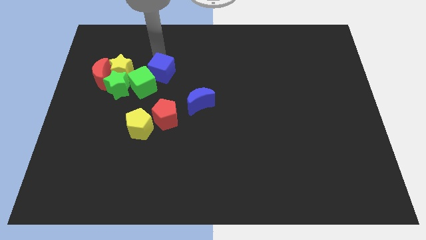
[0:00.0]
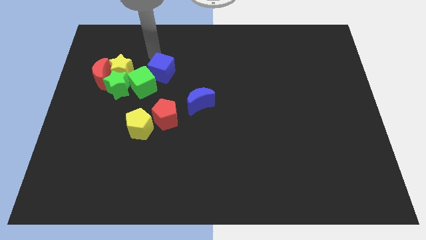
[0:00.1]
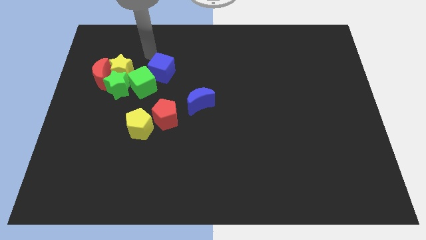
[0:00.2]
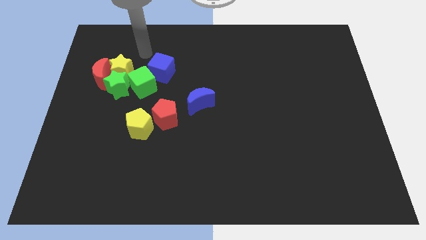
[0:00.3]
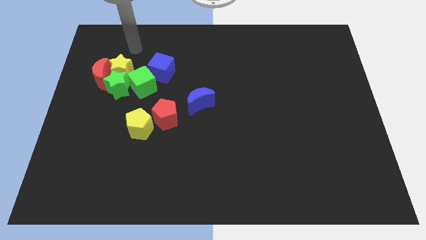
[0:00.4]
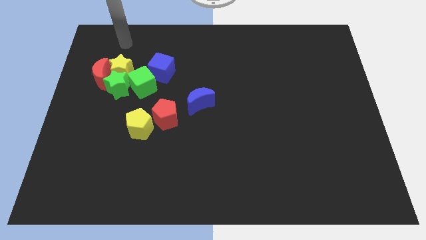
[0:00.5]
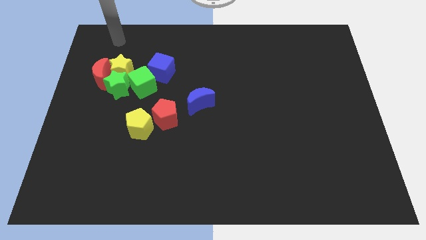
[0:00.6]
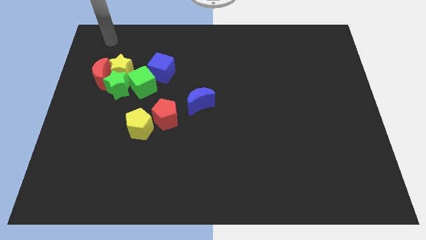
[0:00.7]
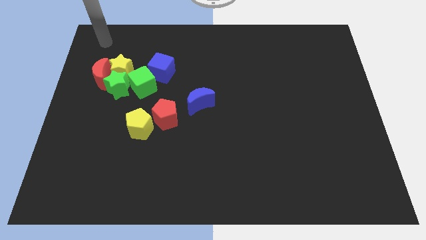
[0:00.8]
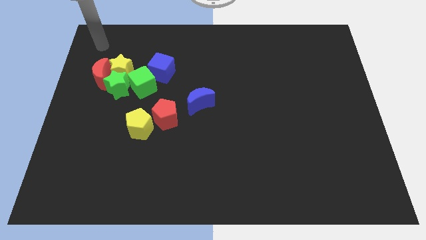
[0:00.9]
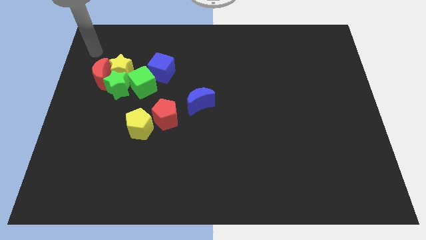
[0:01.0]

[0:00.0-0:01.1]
move the arm away from the blue cube

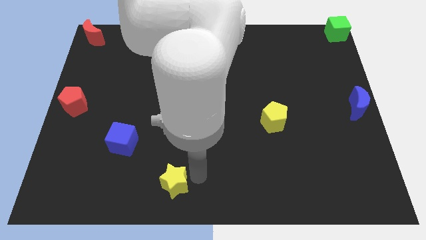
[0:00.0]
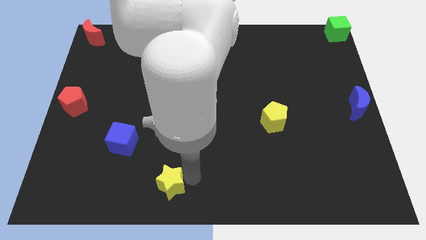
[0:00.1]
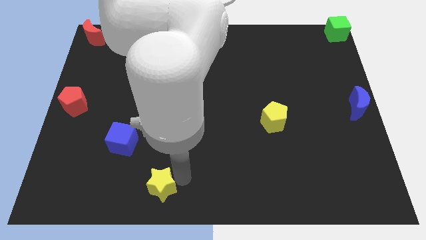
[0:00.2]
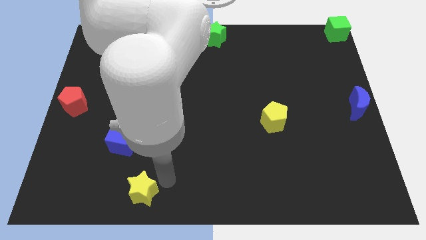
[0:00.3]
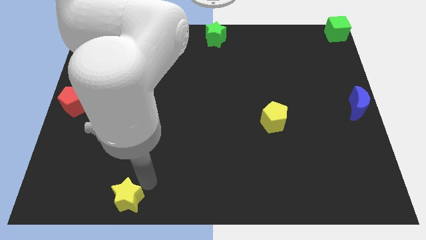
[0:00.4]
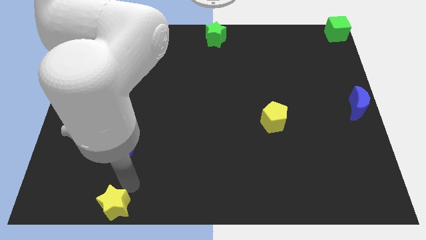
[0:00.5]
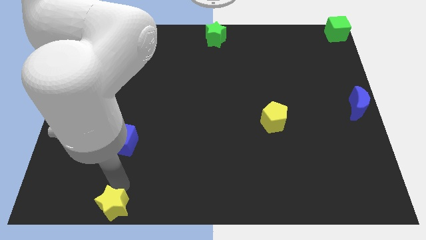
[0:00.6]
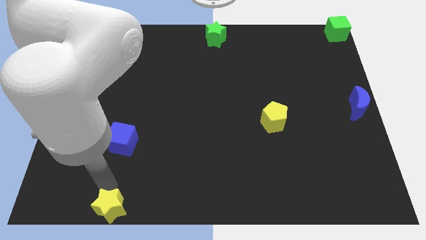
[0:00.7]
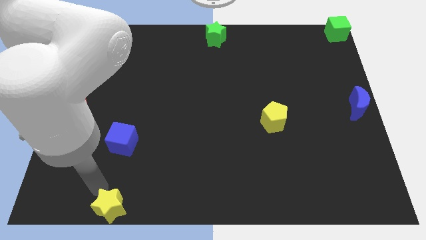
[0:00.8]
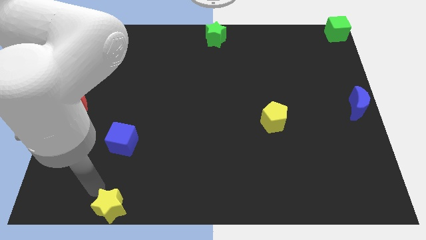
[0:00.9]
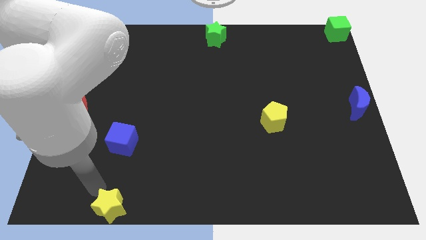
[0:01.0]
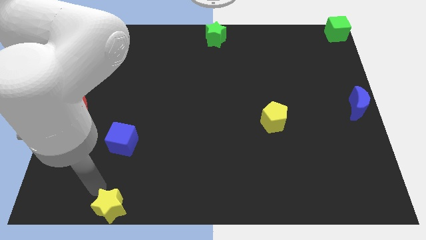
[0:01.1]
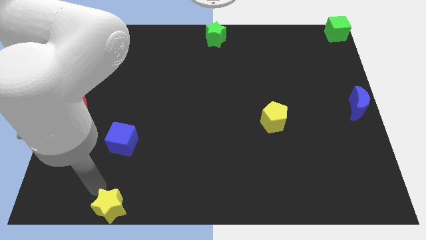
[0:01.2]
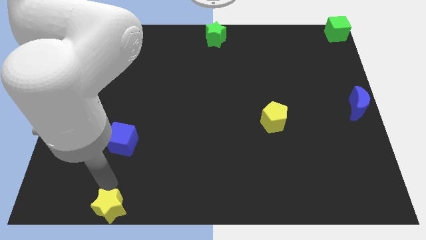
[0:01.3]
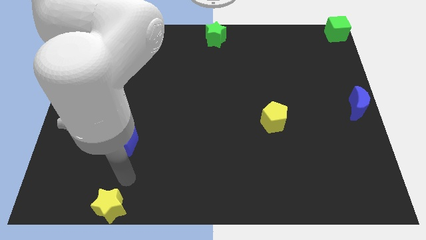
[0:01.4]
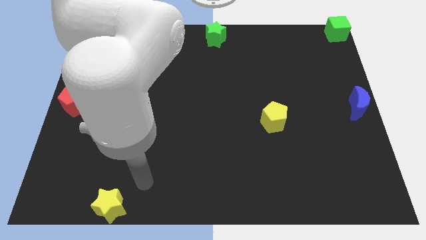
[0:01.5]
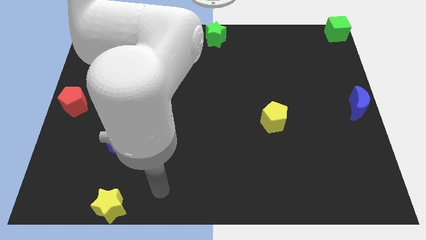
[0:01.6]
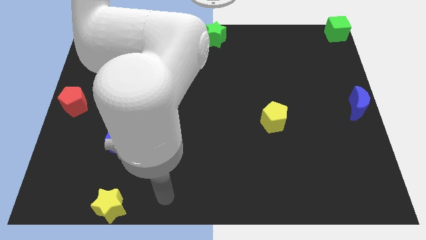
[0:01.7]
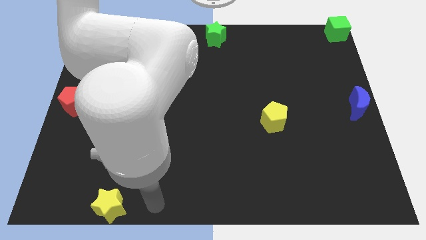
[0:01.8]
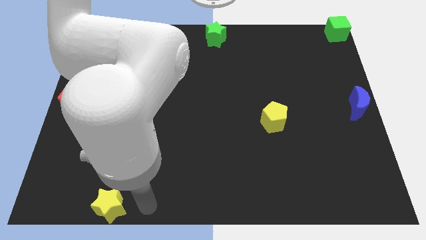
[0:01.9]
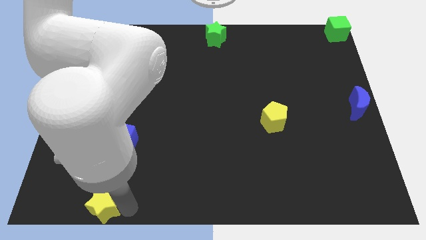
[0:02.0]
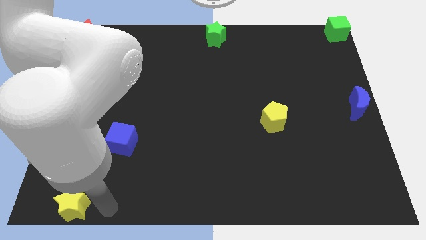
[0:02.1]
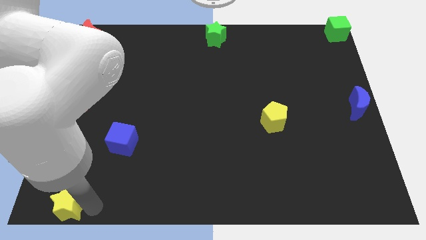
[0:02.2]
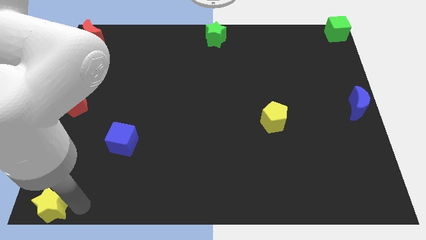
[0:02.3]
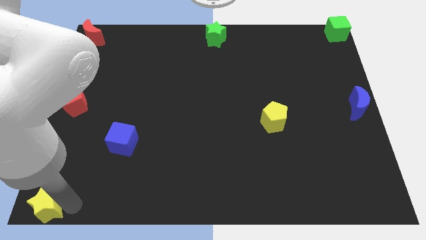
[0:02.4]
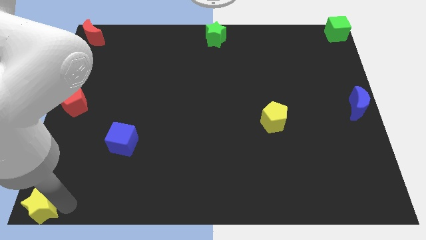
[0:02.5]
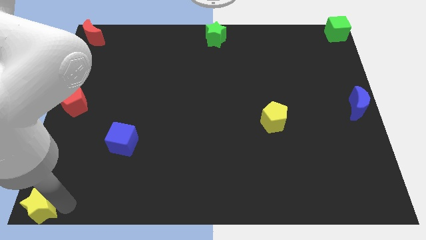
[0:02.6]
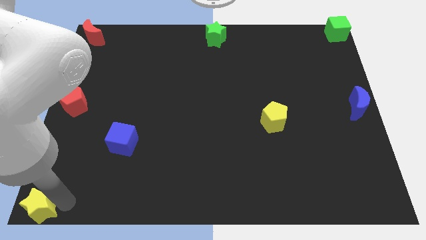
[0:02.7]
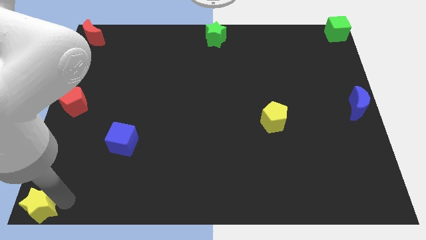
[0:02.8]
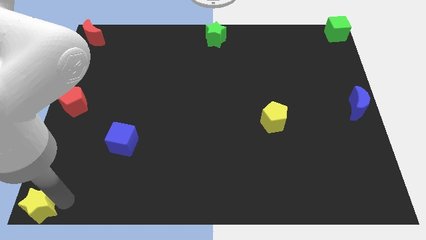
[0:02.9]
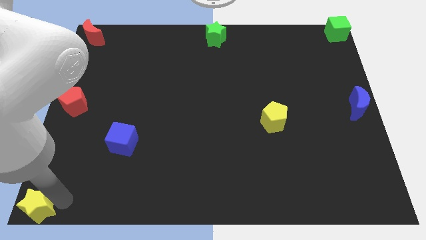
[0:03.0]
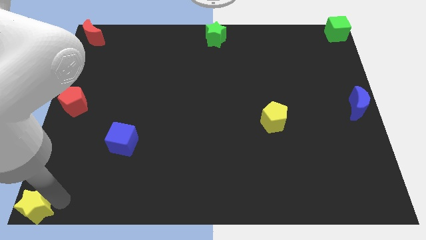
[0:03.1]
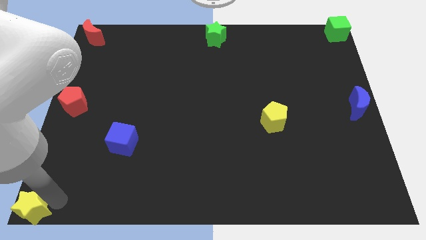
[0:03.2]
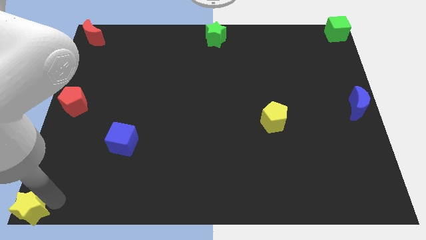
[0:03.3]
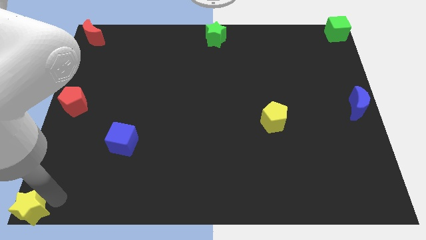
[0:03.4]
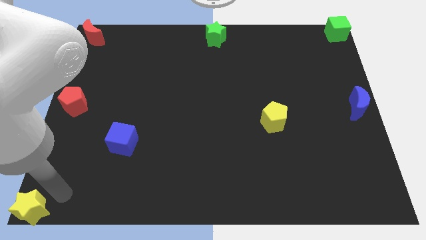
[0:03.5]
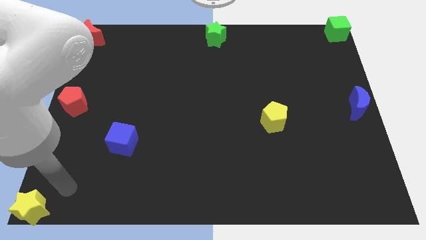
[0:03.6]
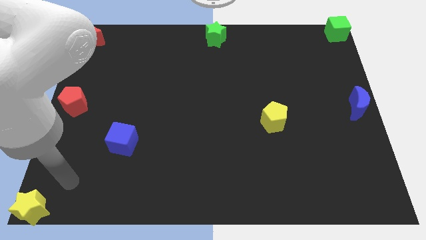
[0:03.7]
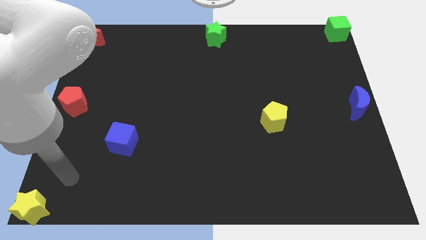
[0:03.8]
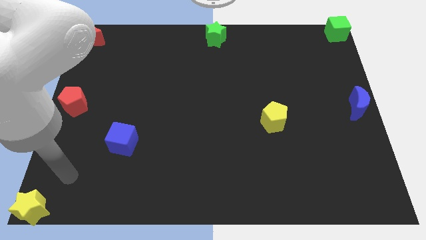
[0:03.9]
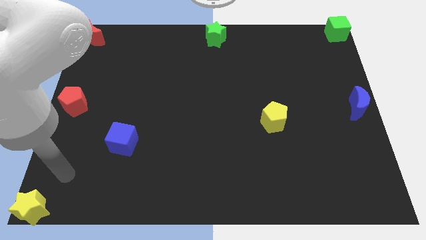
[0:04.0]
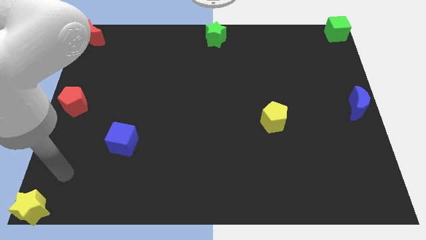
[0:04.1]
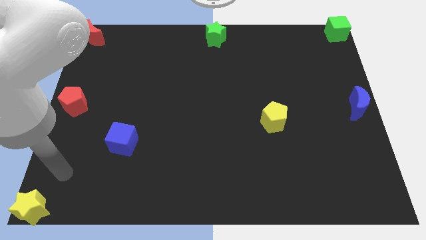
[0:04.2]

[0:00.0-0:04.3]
push the yellow star to the bottom left corner of the board

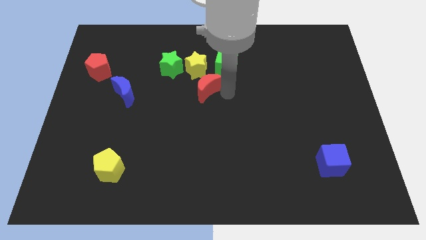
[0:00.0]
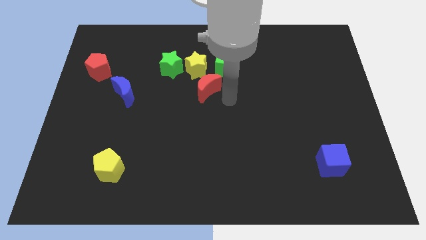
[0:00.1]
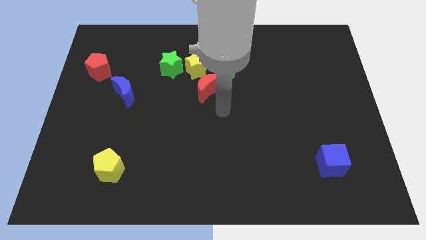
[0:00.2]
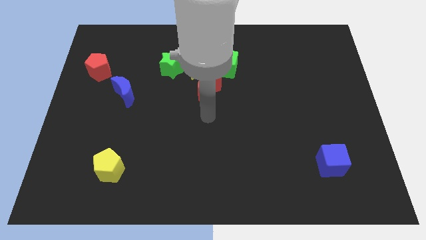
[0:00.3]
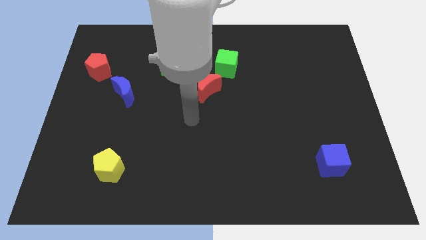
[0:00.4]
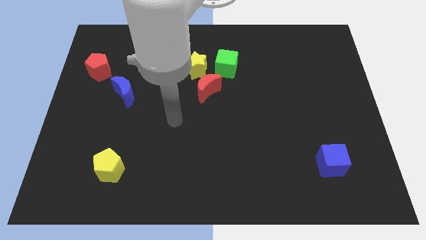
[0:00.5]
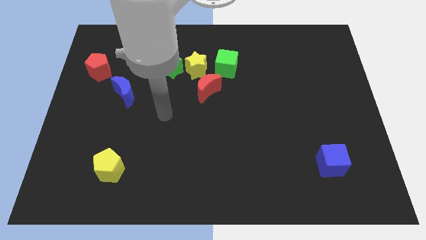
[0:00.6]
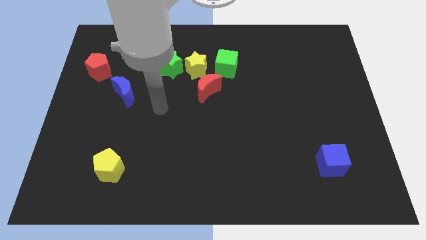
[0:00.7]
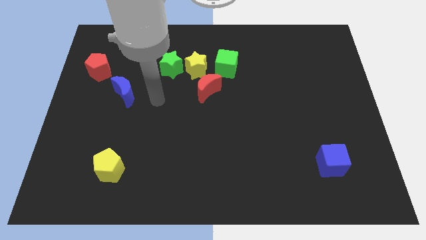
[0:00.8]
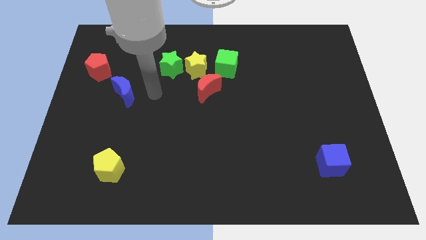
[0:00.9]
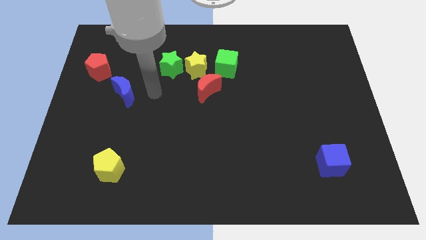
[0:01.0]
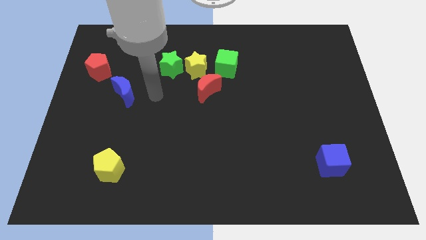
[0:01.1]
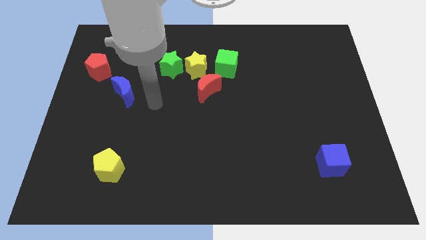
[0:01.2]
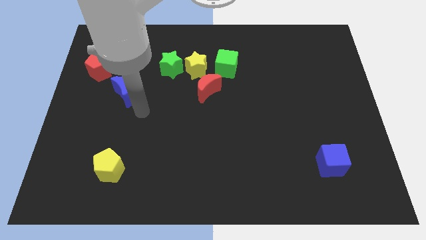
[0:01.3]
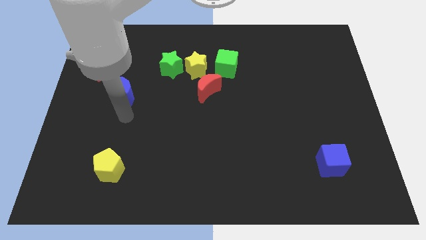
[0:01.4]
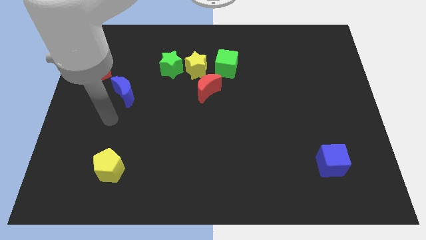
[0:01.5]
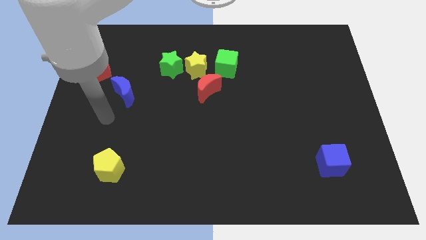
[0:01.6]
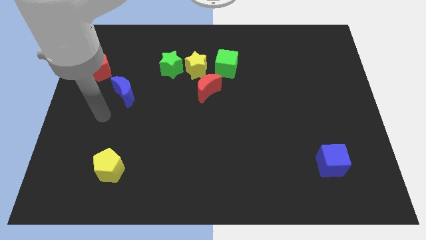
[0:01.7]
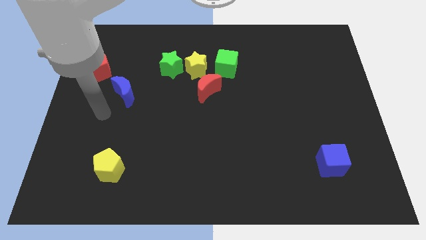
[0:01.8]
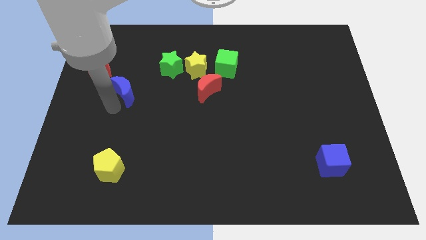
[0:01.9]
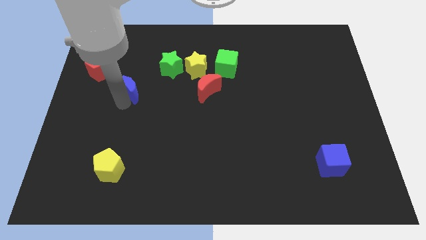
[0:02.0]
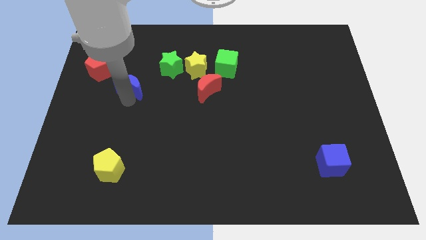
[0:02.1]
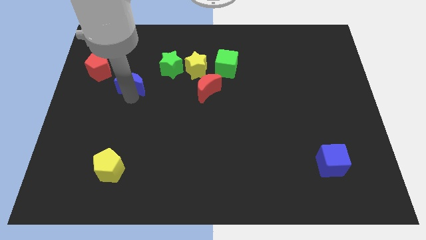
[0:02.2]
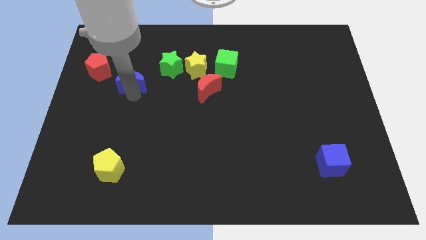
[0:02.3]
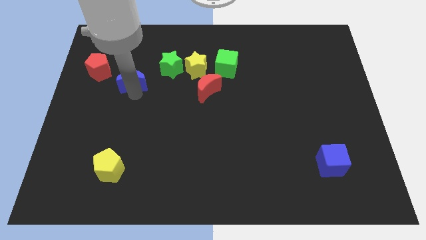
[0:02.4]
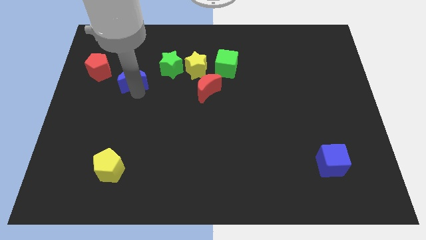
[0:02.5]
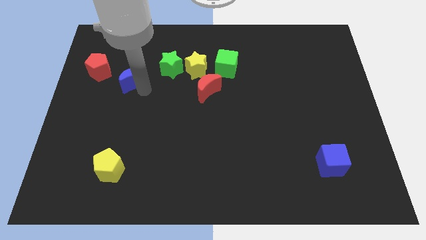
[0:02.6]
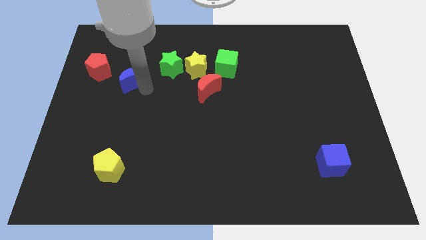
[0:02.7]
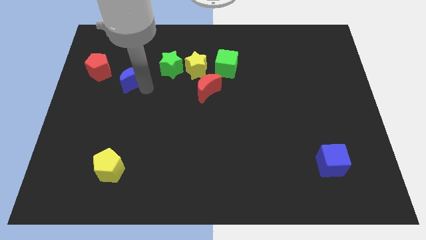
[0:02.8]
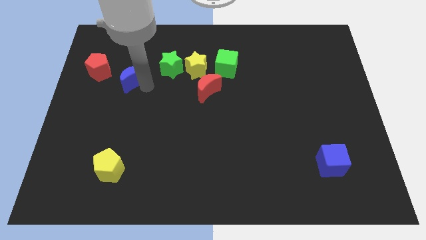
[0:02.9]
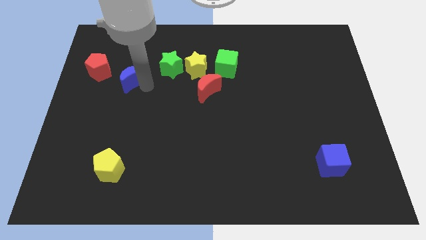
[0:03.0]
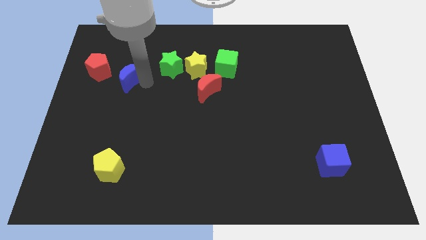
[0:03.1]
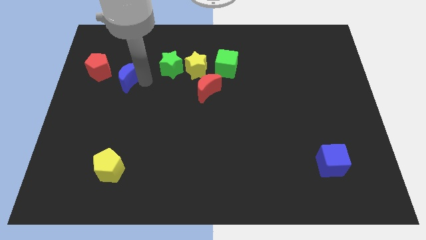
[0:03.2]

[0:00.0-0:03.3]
move the blue crescent away from the red pentagon

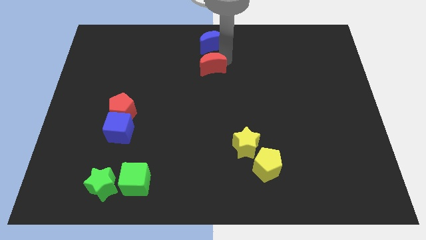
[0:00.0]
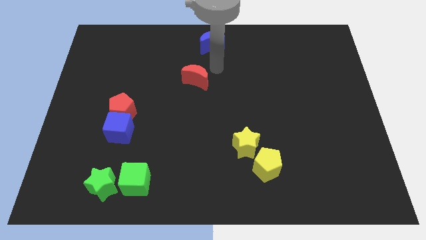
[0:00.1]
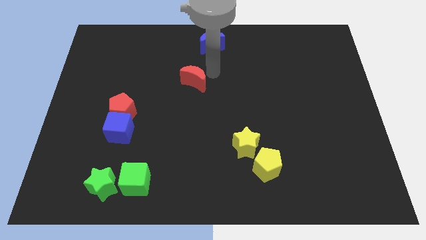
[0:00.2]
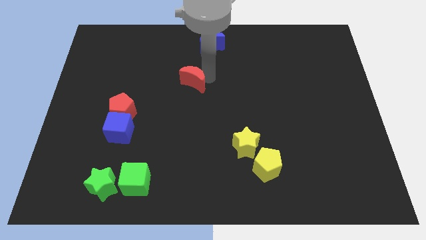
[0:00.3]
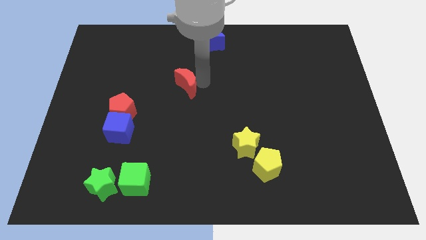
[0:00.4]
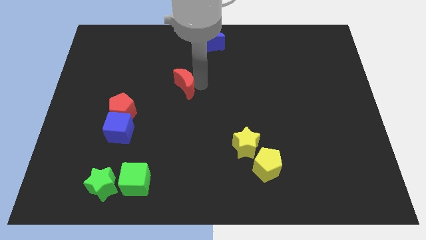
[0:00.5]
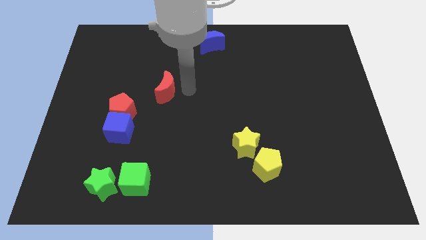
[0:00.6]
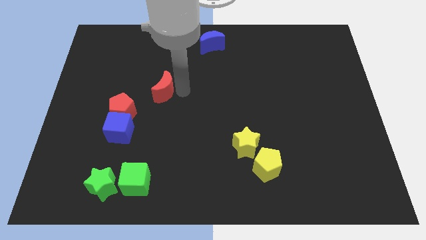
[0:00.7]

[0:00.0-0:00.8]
push the red crescent towards the red pentagon
